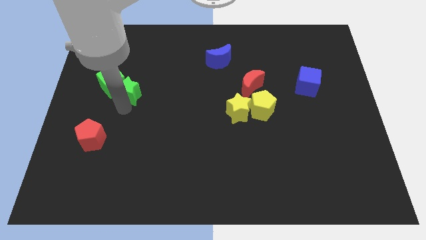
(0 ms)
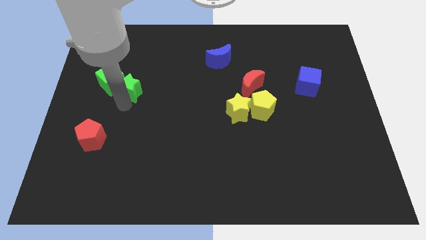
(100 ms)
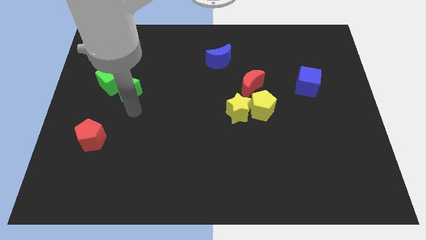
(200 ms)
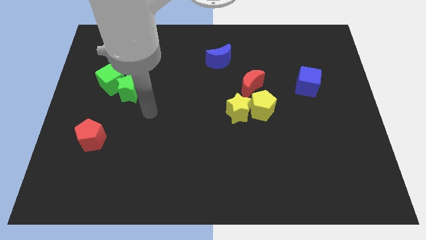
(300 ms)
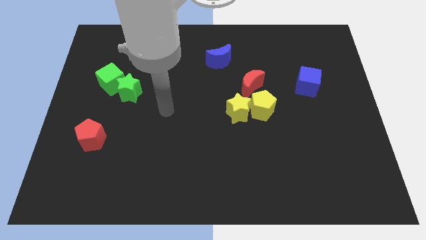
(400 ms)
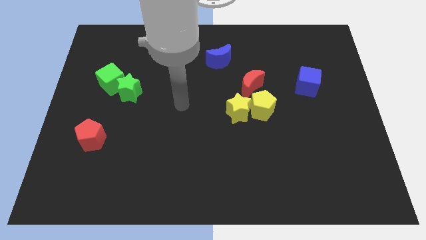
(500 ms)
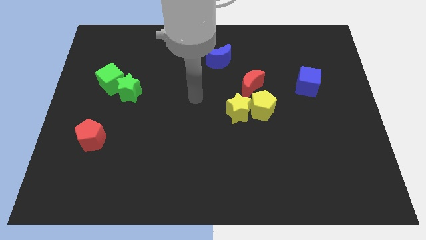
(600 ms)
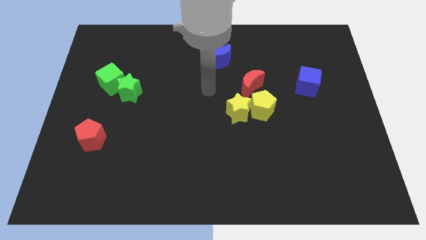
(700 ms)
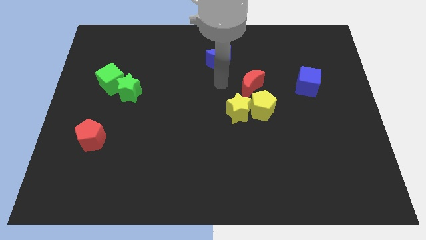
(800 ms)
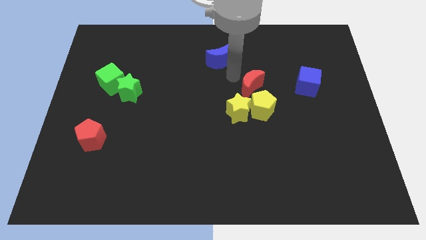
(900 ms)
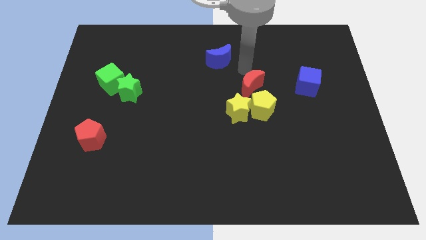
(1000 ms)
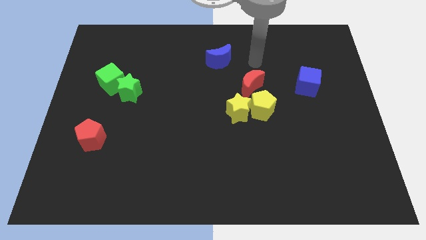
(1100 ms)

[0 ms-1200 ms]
move the arm to the top of the red moon

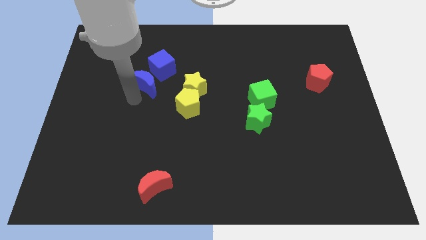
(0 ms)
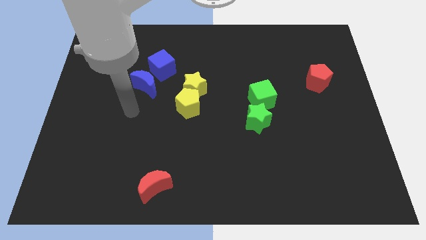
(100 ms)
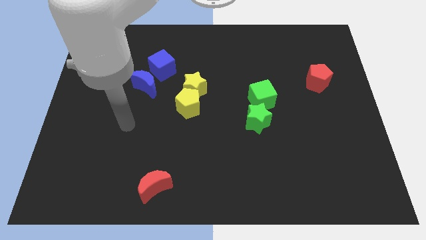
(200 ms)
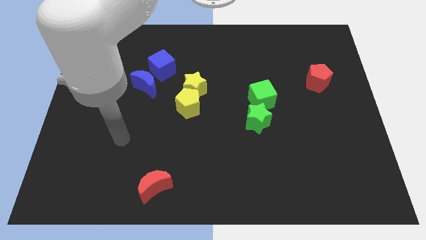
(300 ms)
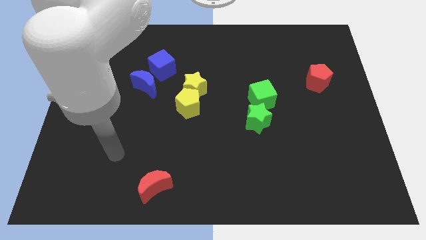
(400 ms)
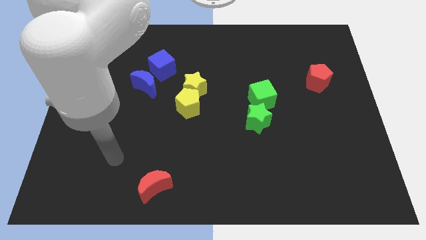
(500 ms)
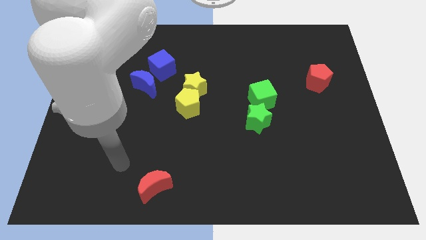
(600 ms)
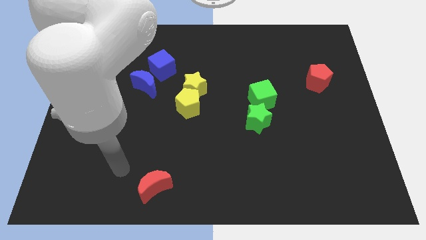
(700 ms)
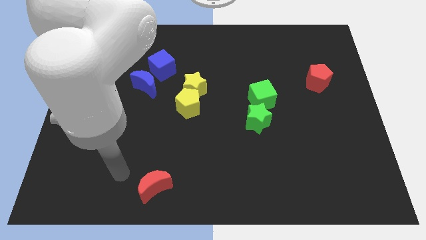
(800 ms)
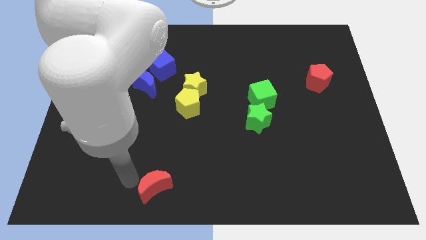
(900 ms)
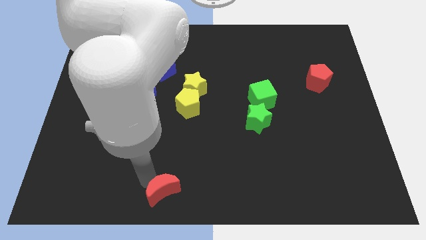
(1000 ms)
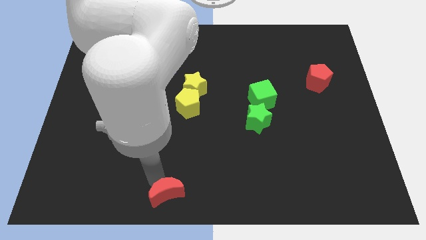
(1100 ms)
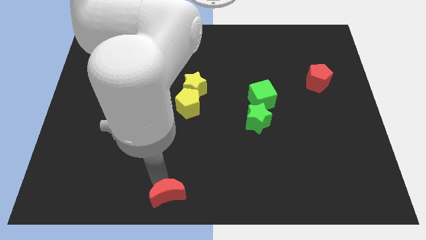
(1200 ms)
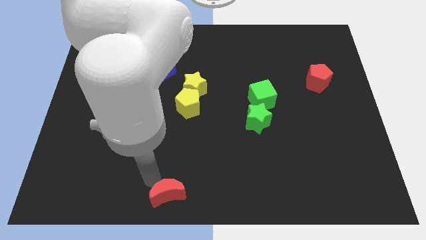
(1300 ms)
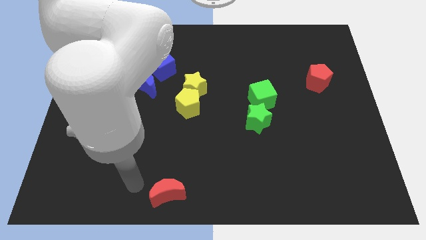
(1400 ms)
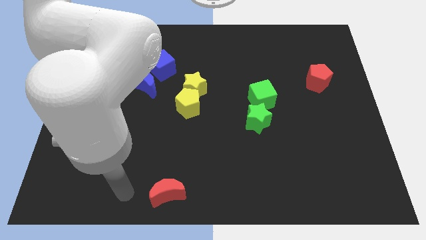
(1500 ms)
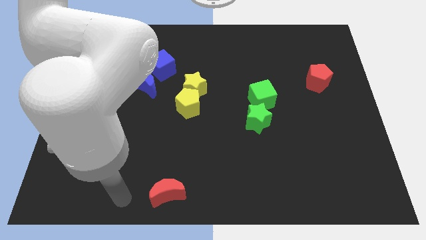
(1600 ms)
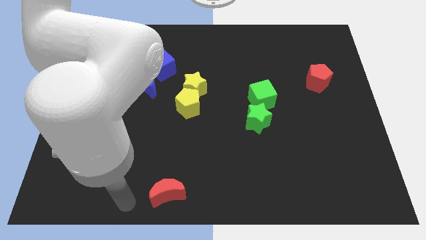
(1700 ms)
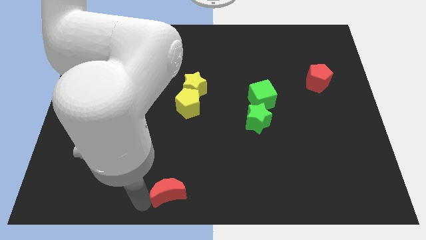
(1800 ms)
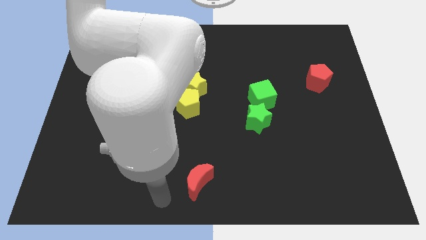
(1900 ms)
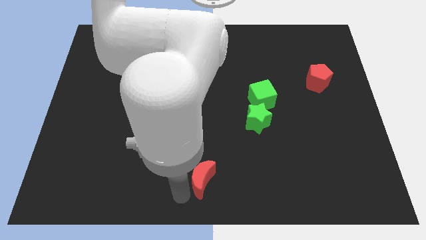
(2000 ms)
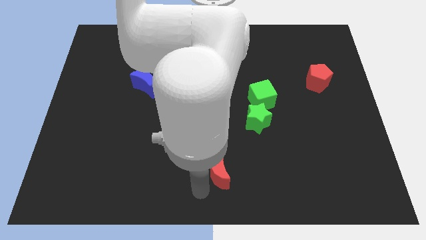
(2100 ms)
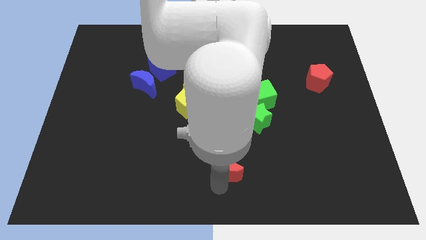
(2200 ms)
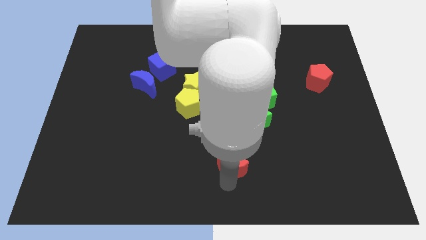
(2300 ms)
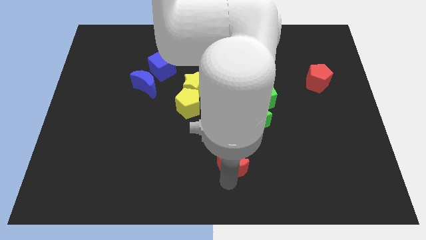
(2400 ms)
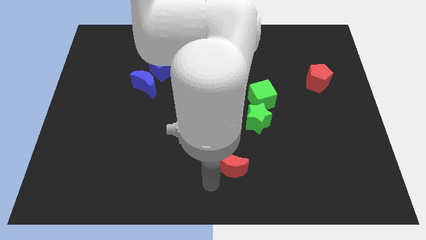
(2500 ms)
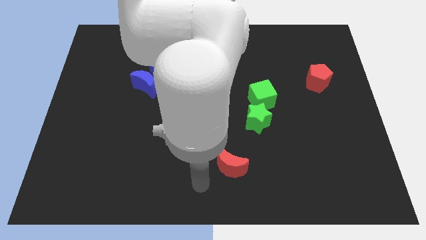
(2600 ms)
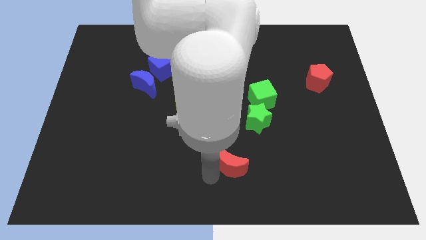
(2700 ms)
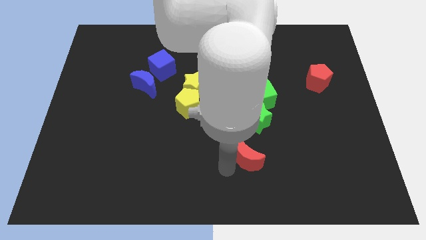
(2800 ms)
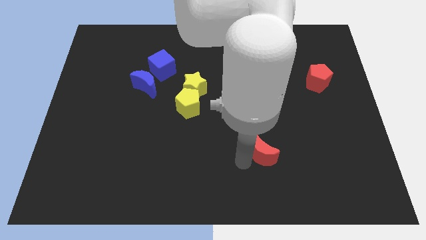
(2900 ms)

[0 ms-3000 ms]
push the red moon at the bottom side of the group of green blocks

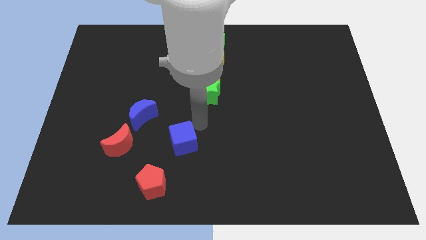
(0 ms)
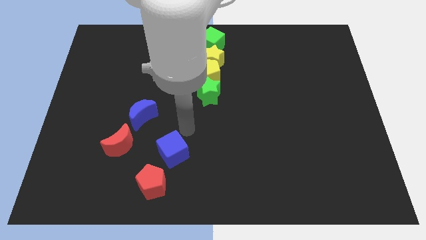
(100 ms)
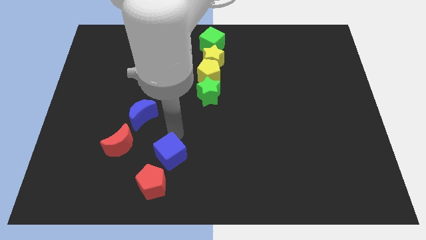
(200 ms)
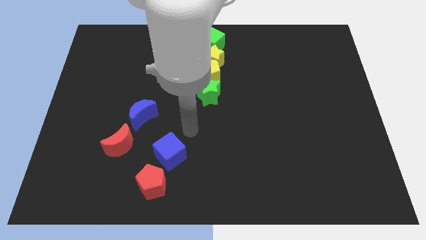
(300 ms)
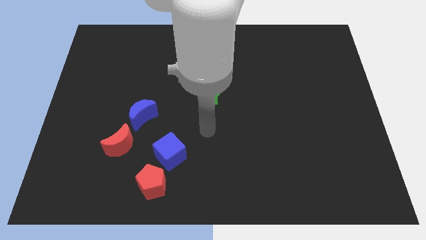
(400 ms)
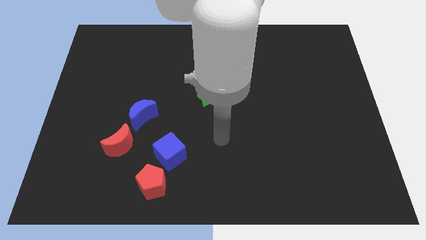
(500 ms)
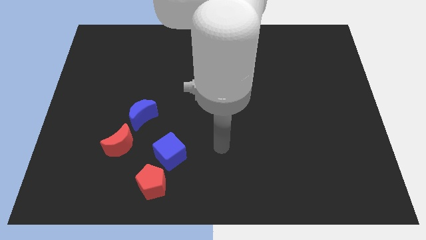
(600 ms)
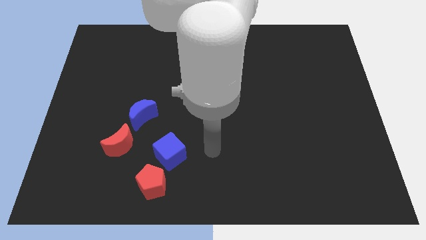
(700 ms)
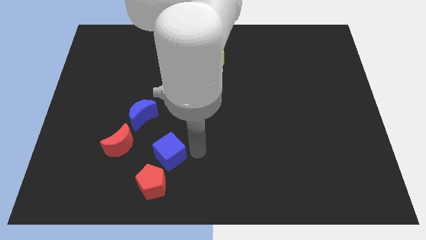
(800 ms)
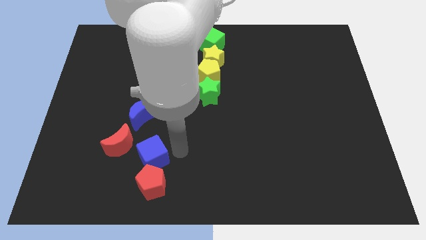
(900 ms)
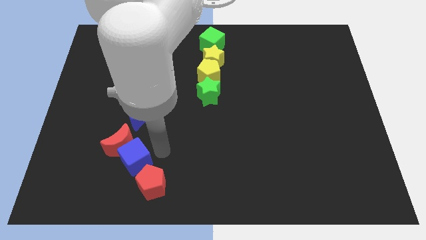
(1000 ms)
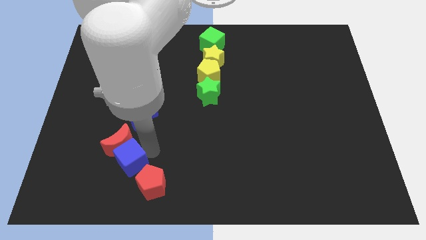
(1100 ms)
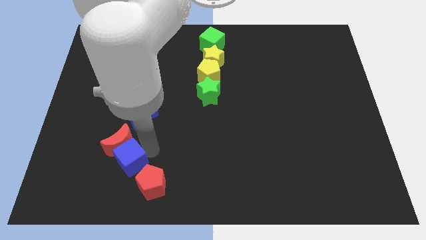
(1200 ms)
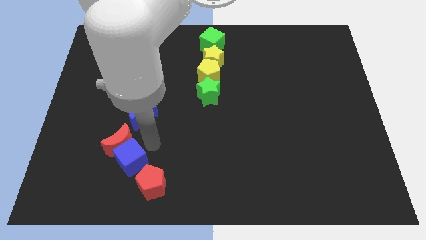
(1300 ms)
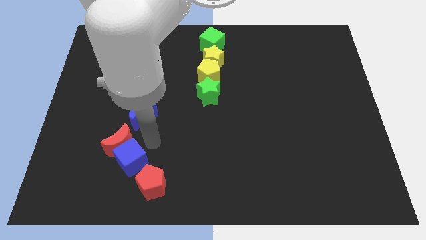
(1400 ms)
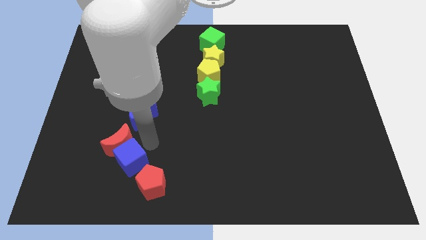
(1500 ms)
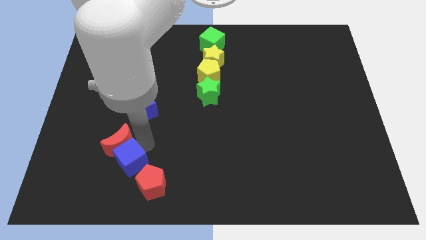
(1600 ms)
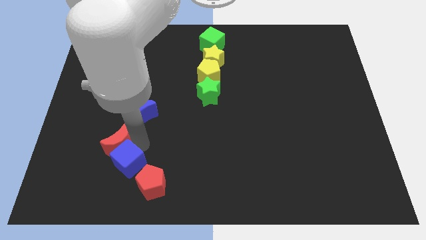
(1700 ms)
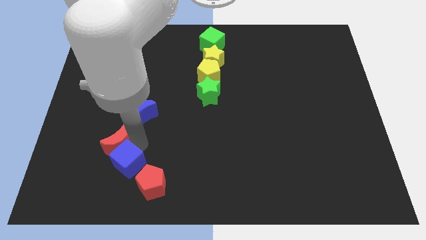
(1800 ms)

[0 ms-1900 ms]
move the blue cube into the red moon

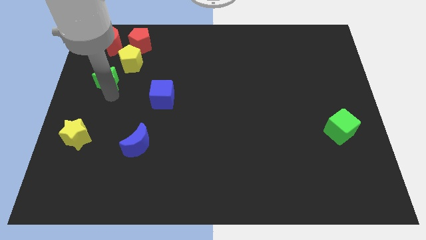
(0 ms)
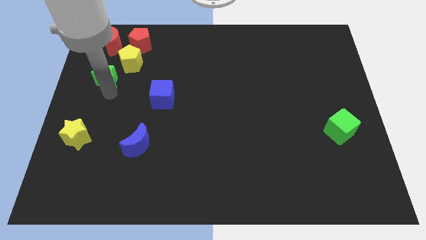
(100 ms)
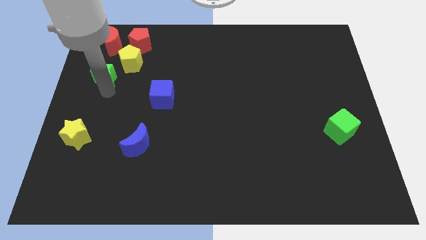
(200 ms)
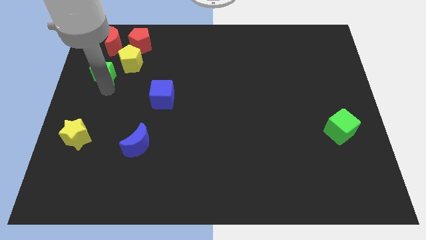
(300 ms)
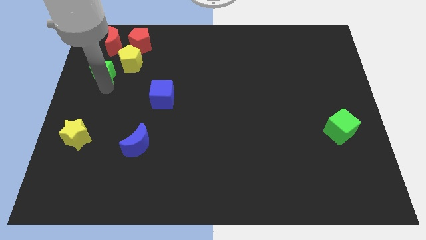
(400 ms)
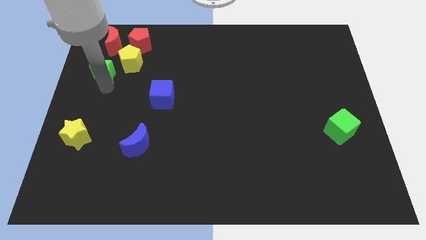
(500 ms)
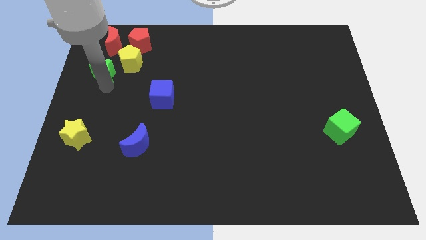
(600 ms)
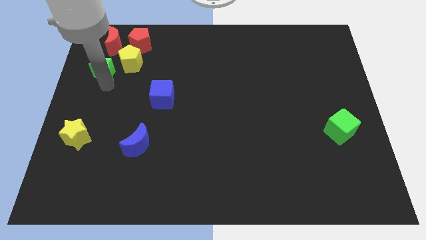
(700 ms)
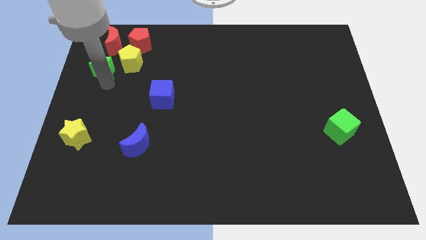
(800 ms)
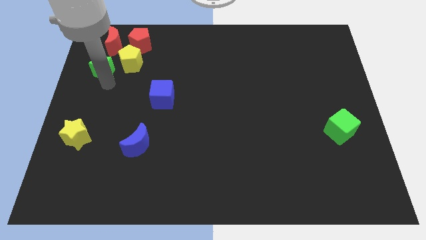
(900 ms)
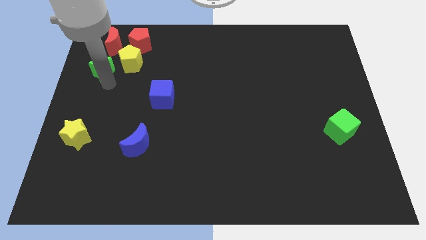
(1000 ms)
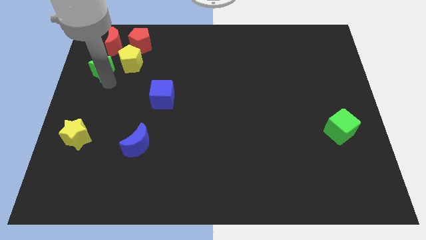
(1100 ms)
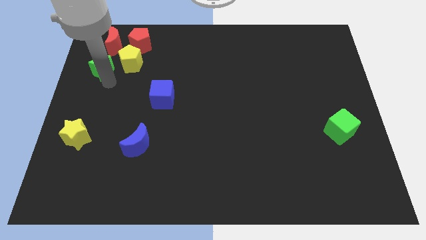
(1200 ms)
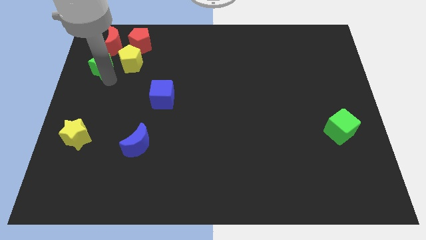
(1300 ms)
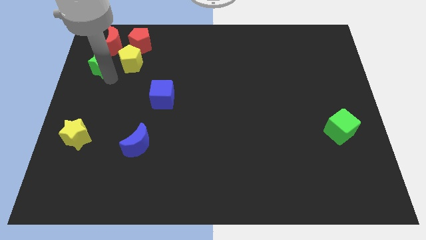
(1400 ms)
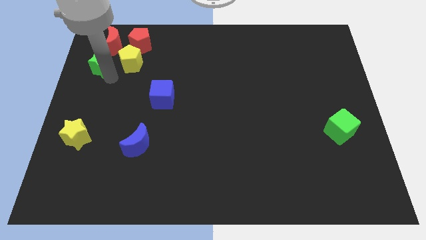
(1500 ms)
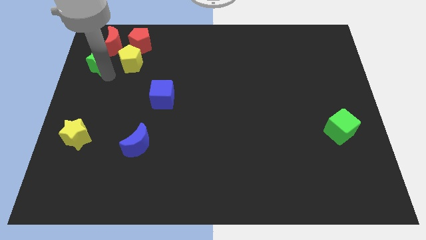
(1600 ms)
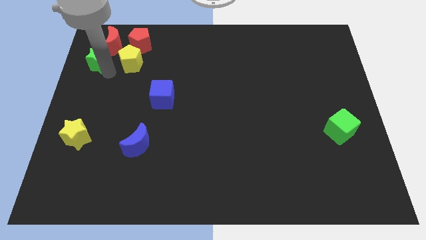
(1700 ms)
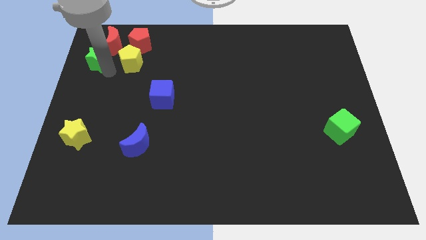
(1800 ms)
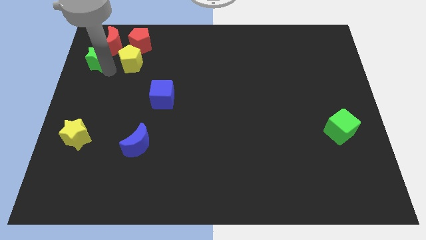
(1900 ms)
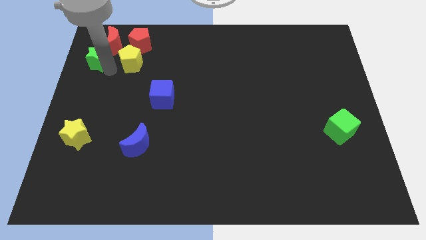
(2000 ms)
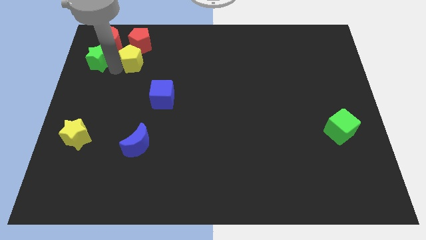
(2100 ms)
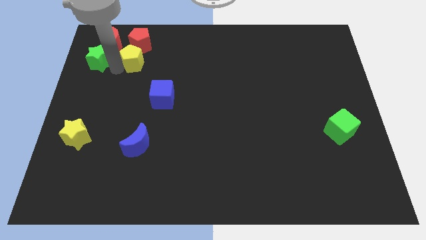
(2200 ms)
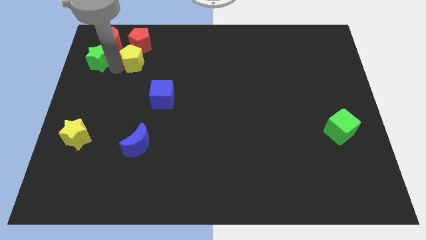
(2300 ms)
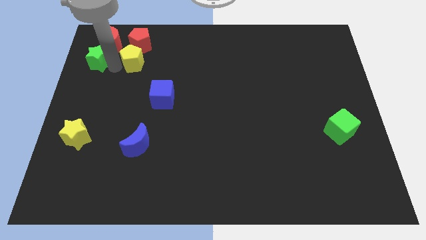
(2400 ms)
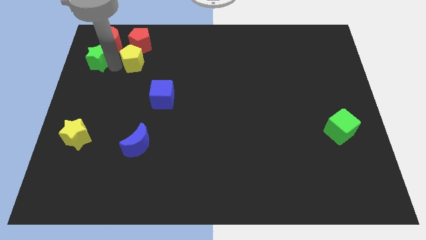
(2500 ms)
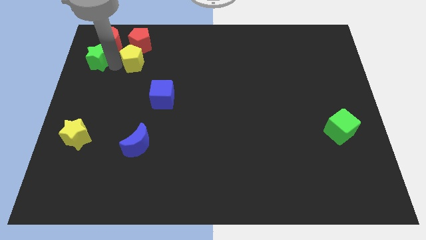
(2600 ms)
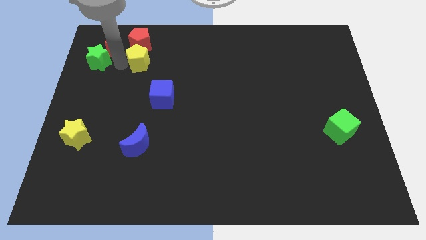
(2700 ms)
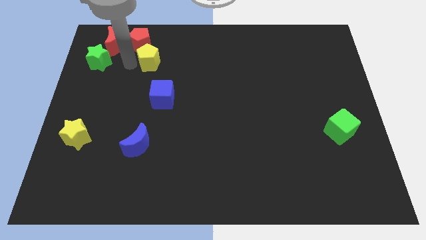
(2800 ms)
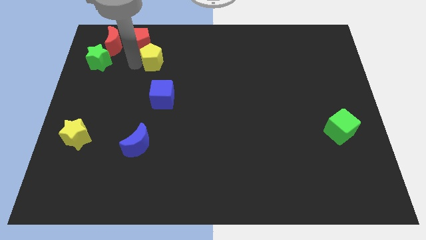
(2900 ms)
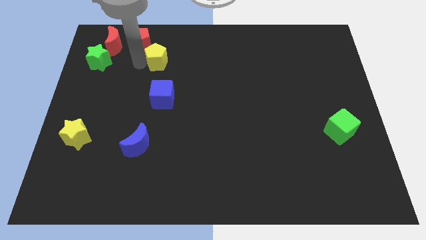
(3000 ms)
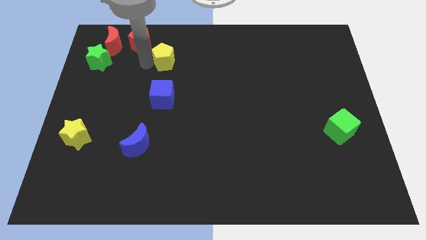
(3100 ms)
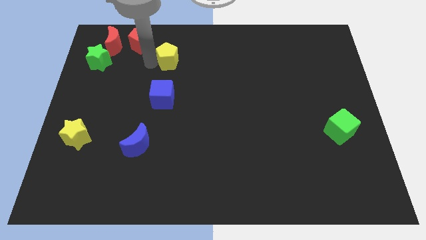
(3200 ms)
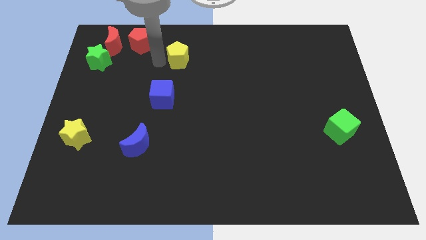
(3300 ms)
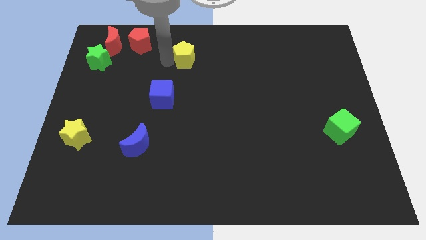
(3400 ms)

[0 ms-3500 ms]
move the green star and the yellow pentagon parallel to each other
